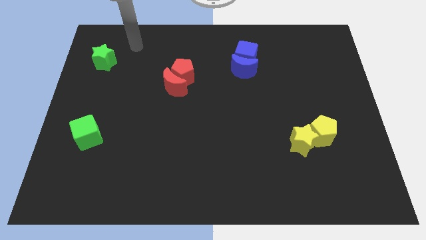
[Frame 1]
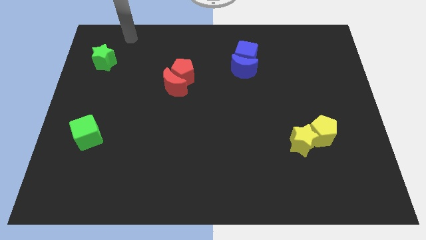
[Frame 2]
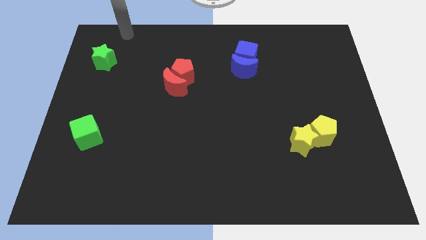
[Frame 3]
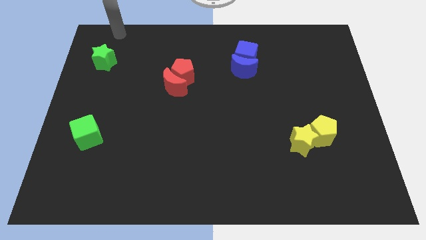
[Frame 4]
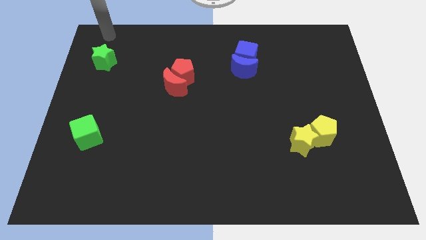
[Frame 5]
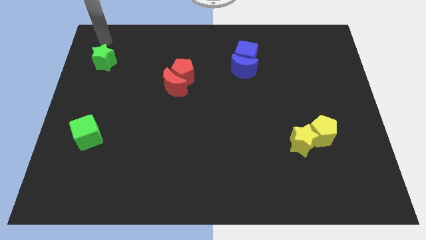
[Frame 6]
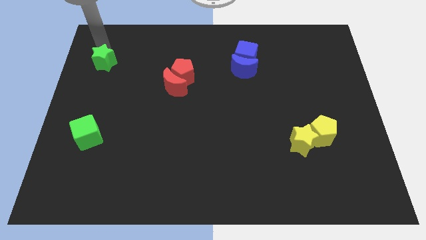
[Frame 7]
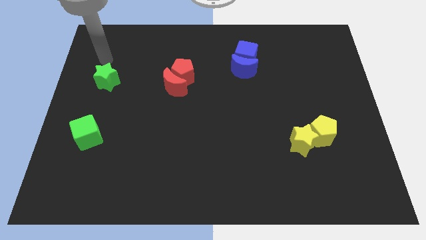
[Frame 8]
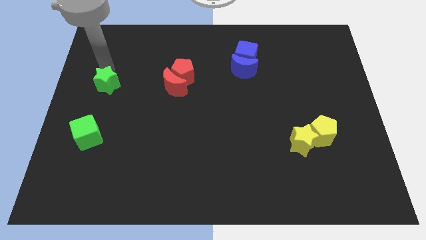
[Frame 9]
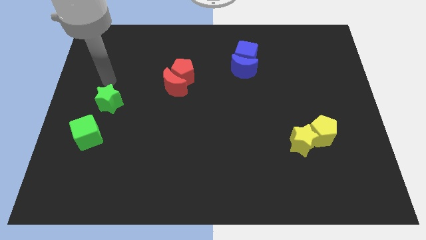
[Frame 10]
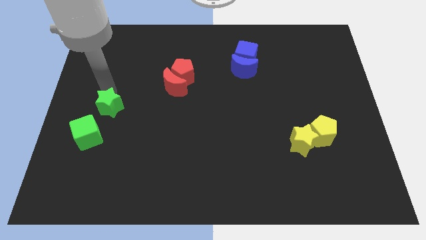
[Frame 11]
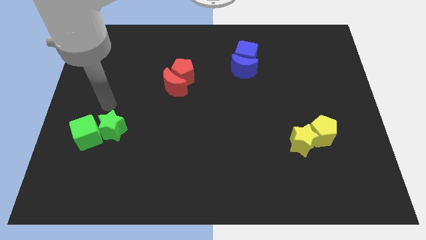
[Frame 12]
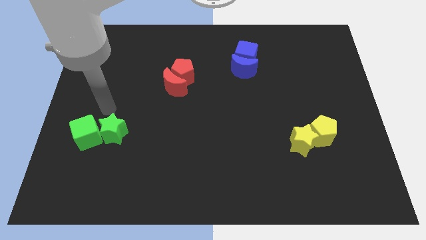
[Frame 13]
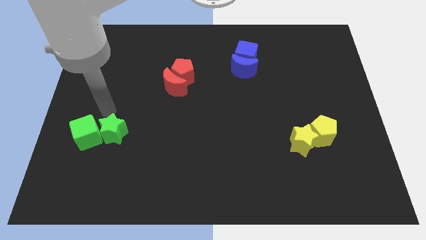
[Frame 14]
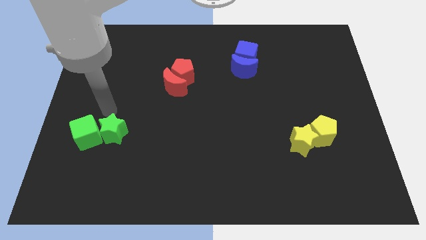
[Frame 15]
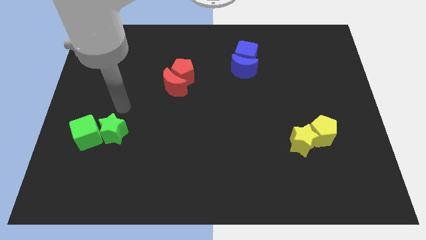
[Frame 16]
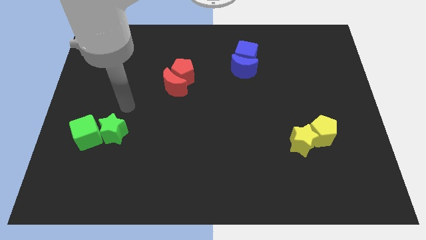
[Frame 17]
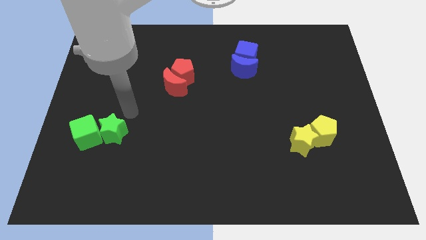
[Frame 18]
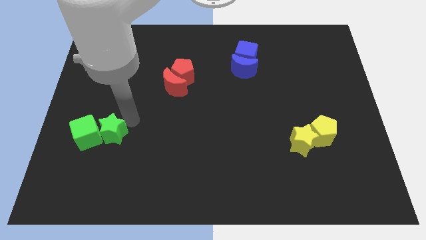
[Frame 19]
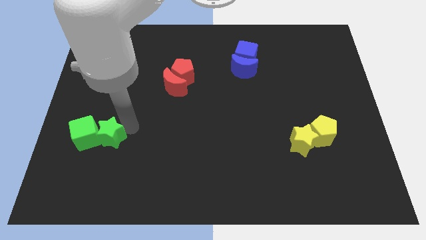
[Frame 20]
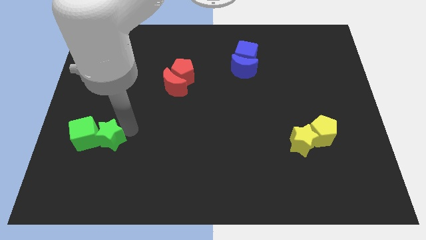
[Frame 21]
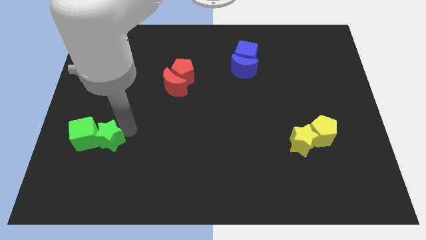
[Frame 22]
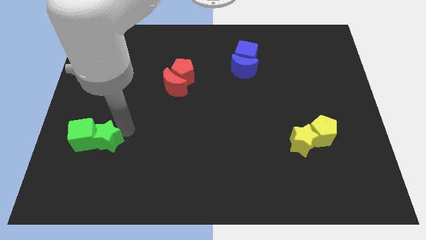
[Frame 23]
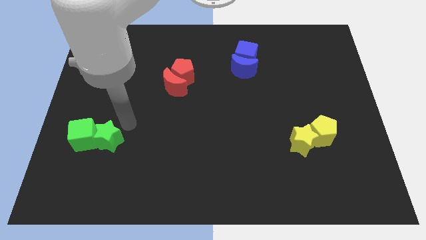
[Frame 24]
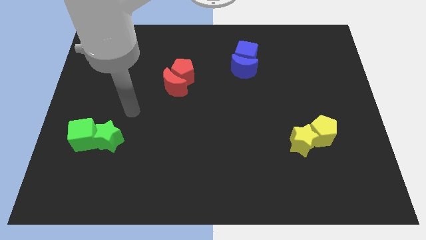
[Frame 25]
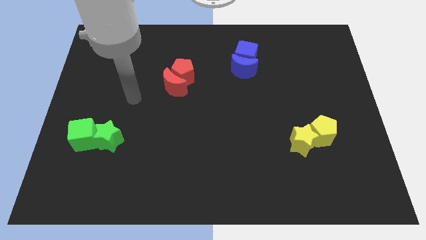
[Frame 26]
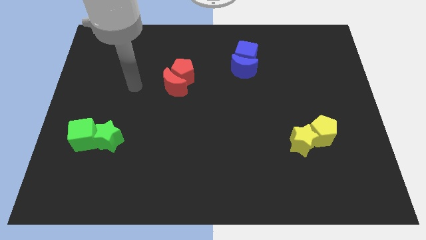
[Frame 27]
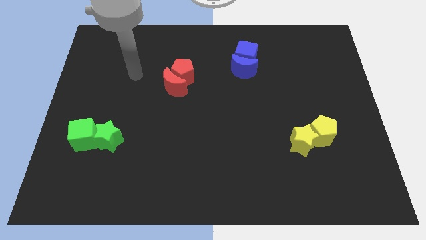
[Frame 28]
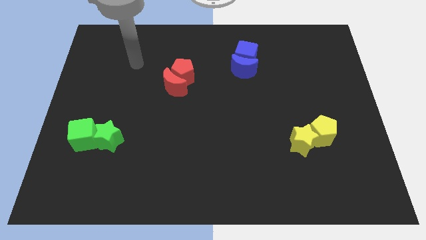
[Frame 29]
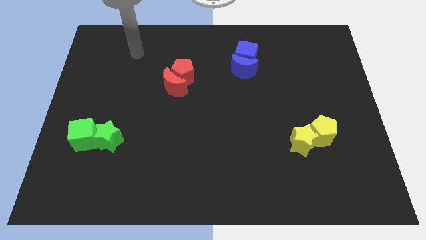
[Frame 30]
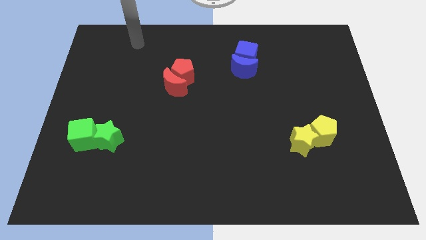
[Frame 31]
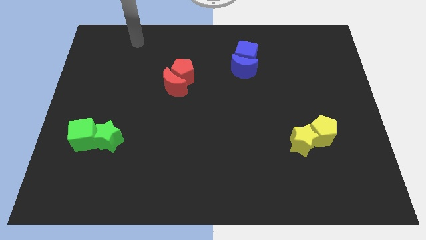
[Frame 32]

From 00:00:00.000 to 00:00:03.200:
push the green star into green cube

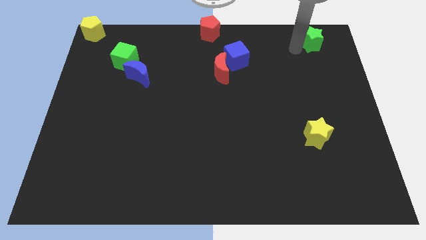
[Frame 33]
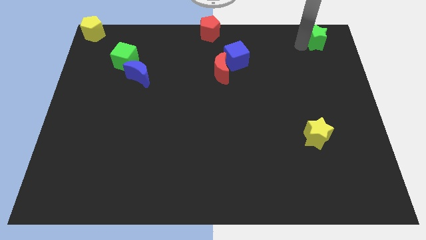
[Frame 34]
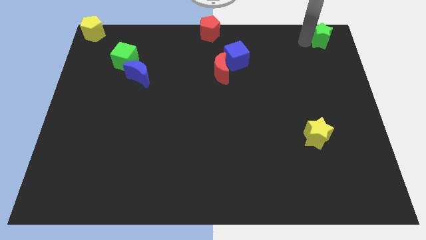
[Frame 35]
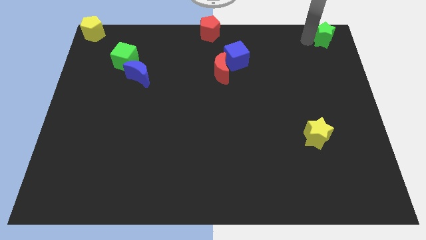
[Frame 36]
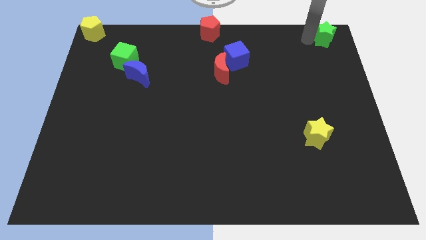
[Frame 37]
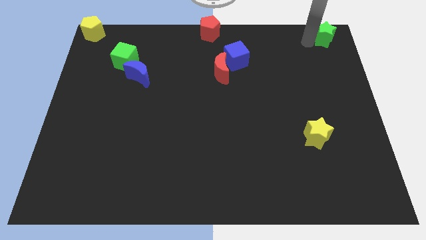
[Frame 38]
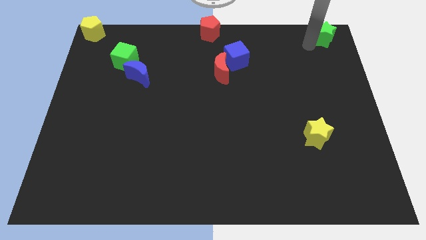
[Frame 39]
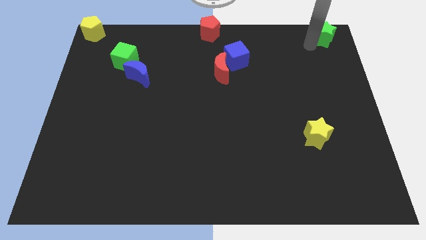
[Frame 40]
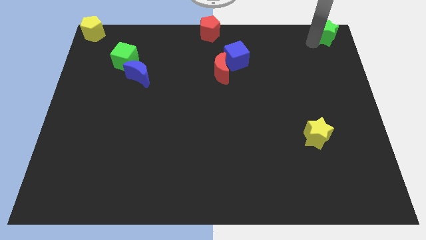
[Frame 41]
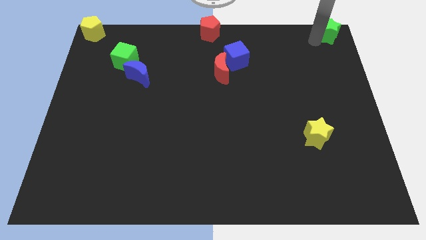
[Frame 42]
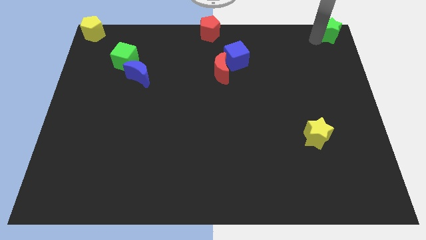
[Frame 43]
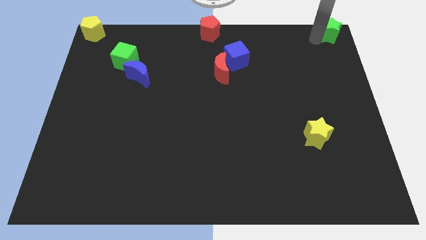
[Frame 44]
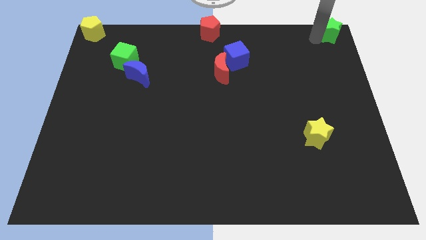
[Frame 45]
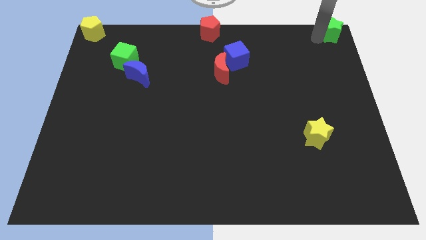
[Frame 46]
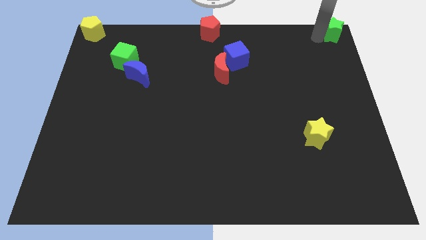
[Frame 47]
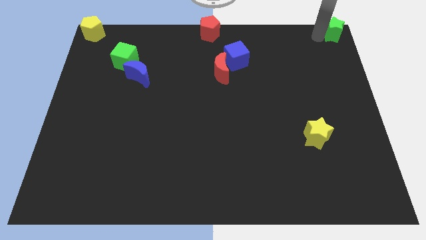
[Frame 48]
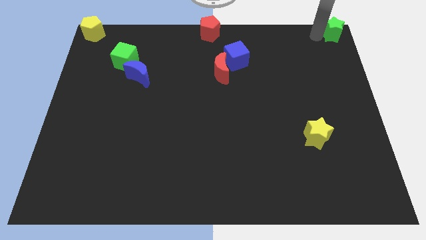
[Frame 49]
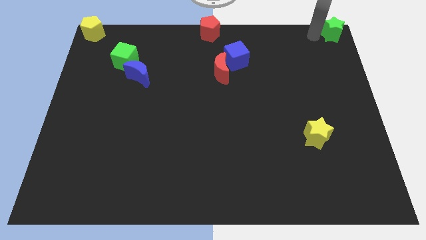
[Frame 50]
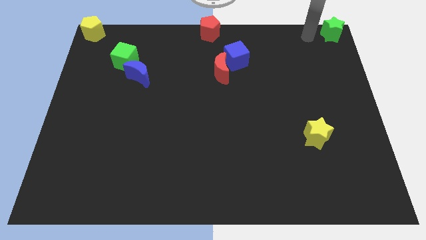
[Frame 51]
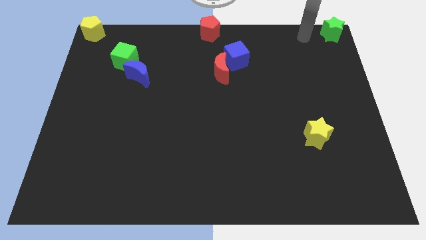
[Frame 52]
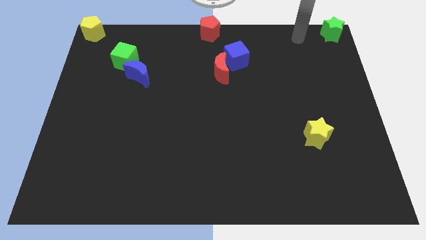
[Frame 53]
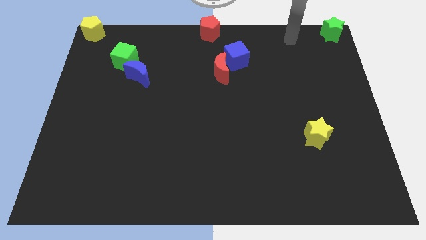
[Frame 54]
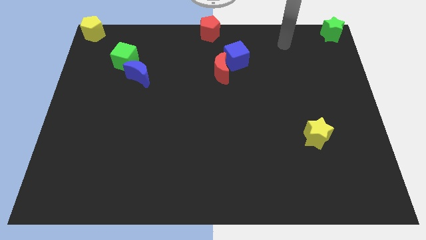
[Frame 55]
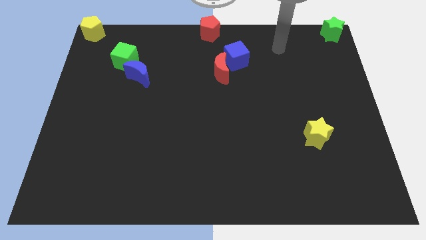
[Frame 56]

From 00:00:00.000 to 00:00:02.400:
push the green star to the top right corner of the board

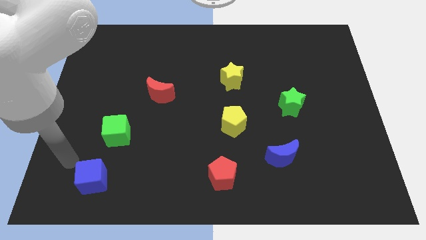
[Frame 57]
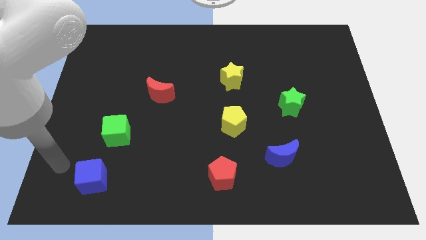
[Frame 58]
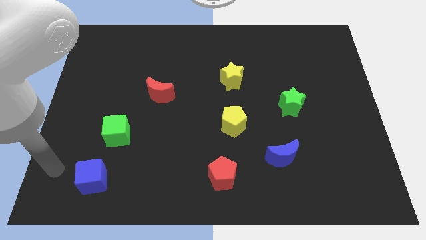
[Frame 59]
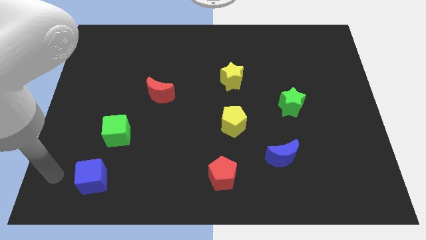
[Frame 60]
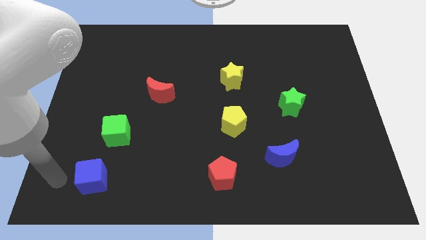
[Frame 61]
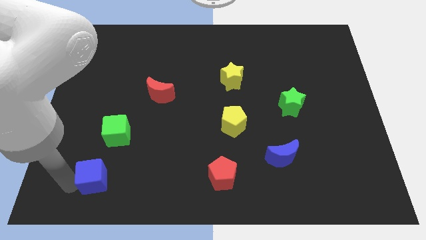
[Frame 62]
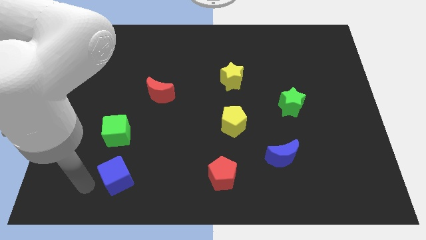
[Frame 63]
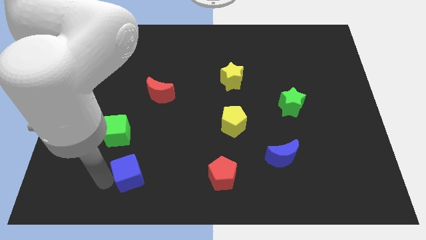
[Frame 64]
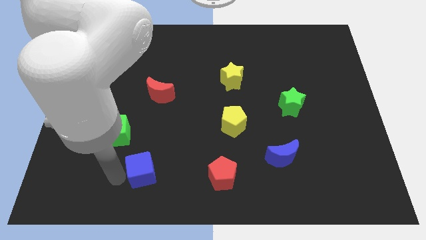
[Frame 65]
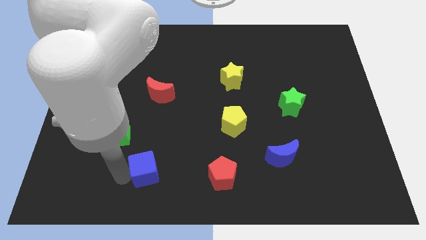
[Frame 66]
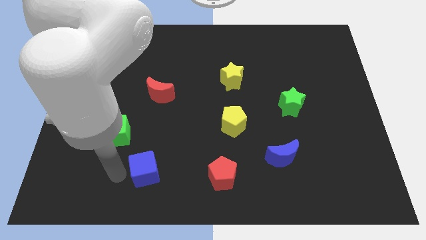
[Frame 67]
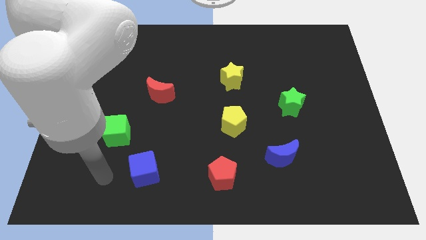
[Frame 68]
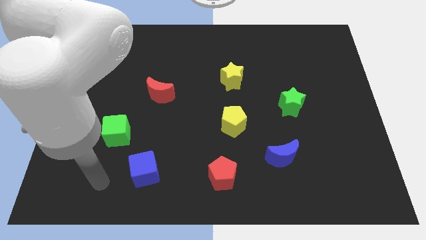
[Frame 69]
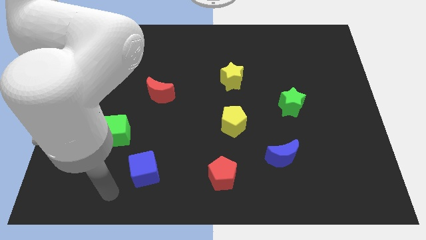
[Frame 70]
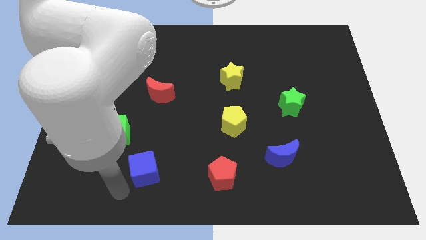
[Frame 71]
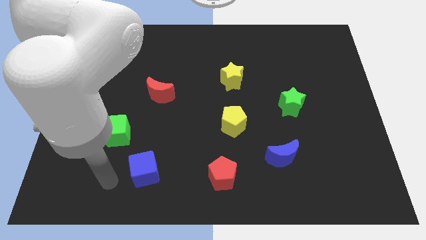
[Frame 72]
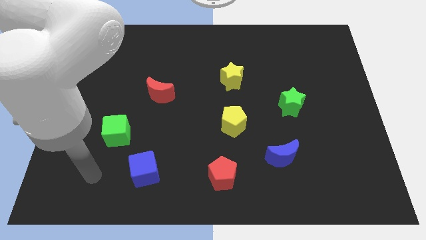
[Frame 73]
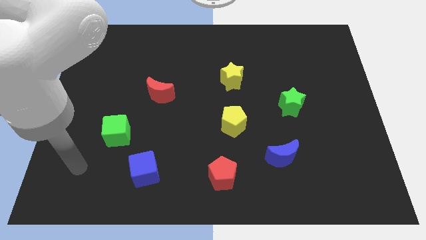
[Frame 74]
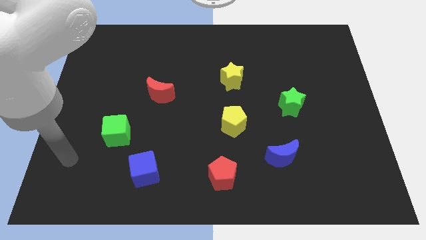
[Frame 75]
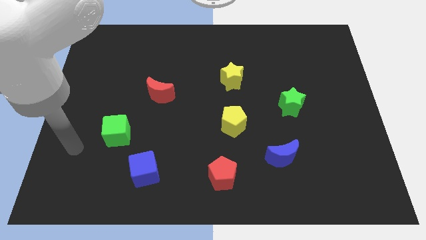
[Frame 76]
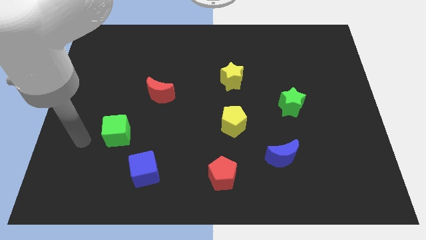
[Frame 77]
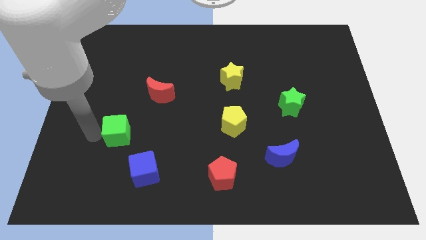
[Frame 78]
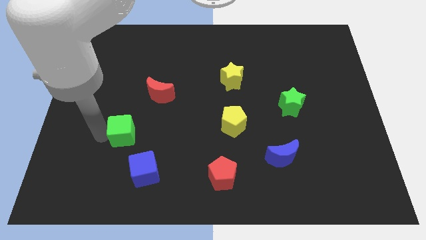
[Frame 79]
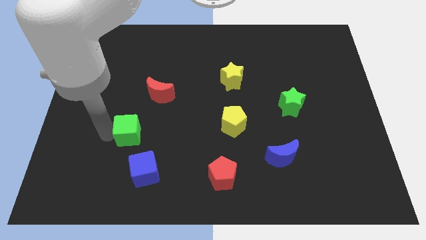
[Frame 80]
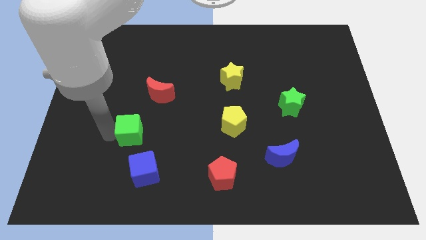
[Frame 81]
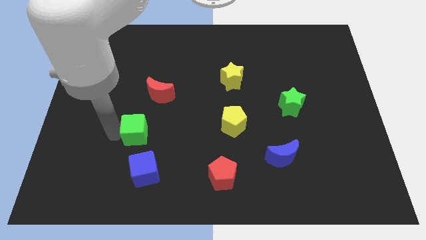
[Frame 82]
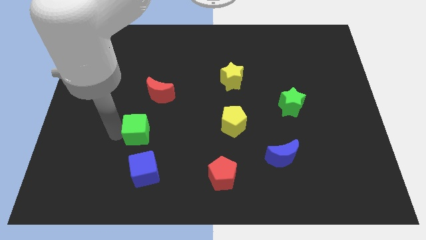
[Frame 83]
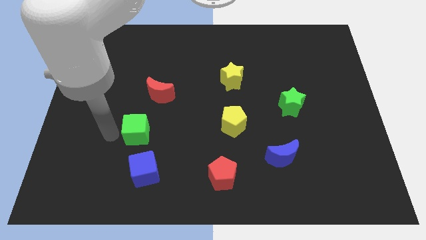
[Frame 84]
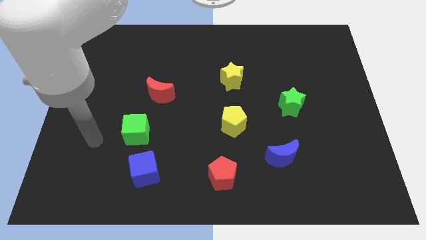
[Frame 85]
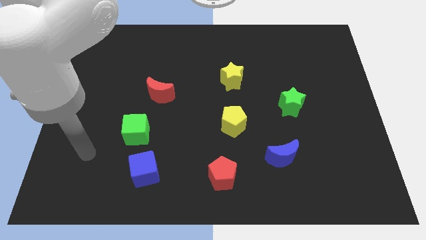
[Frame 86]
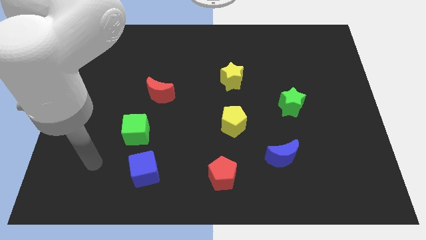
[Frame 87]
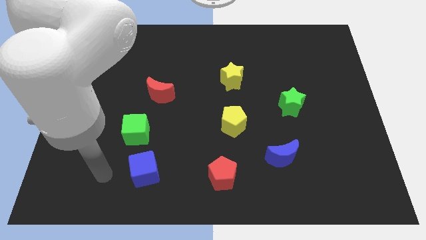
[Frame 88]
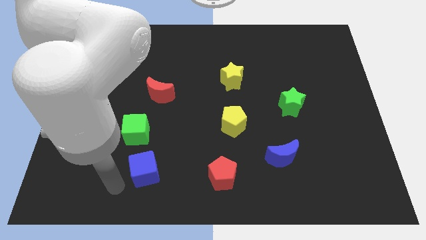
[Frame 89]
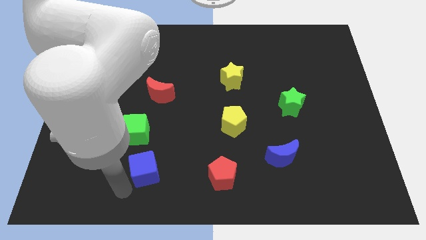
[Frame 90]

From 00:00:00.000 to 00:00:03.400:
place the blue cube and green cube to the bottom of red crescent
